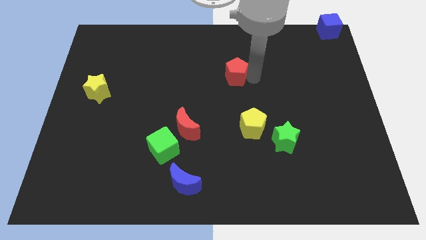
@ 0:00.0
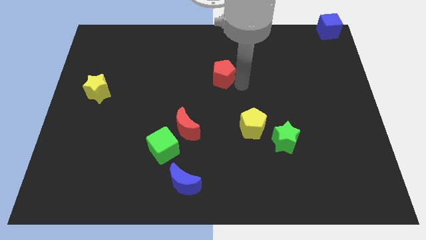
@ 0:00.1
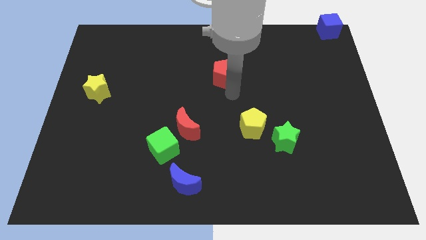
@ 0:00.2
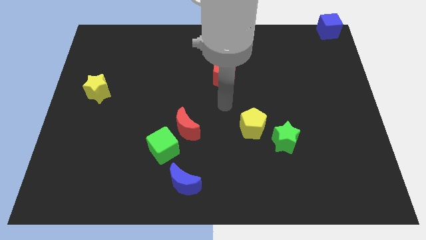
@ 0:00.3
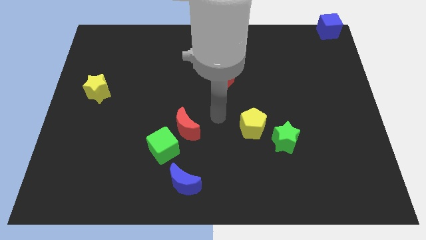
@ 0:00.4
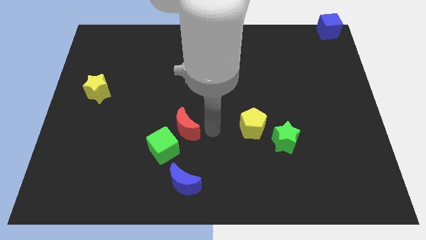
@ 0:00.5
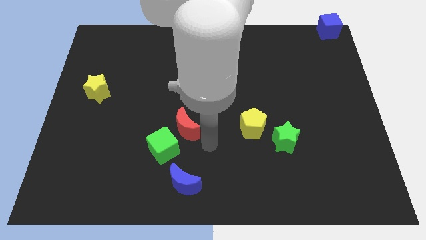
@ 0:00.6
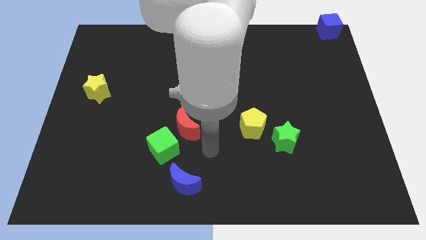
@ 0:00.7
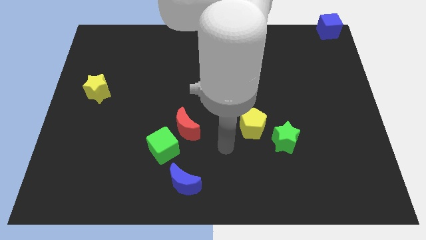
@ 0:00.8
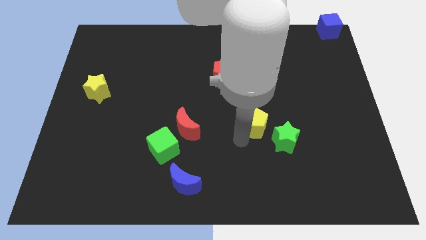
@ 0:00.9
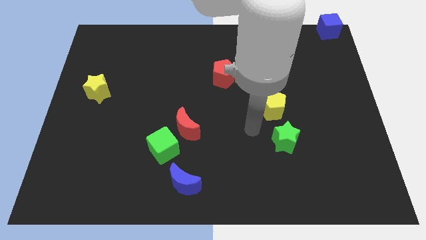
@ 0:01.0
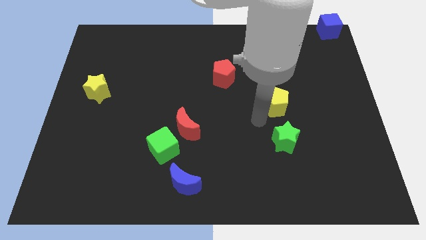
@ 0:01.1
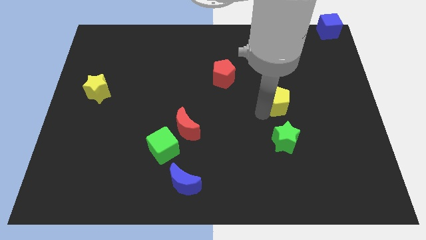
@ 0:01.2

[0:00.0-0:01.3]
push the yellow pentagon above the green star

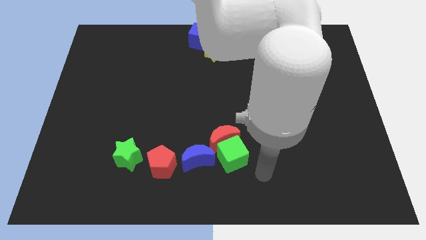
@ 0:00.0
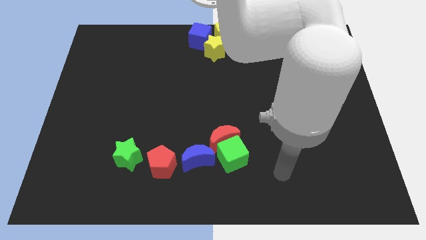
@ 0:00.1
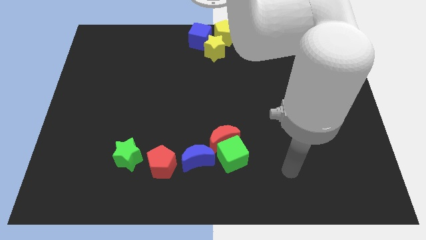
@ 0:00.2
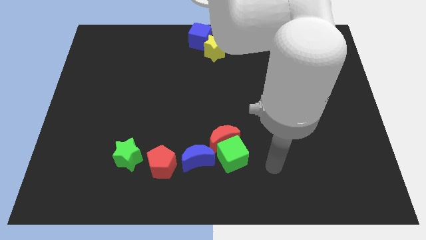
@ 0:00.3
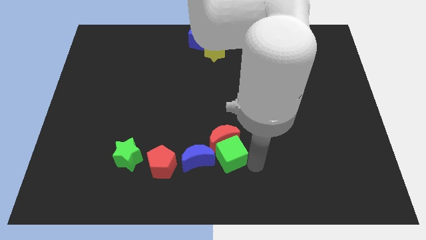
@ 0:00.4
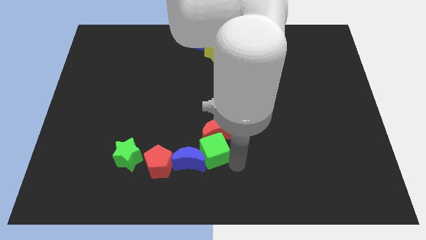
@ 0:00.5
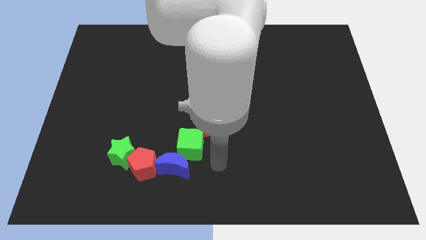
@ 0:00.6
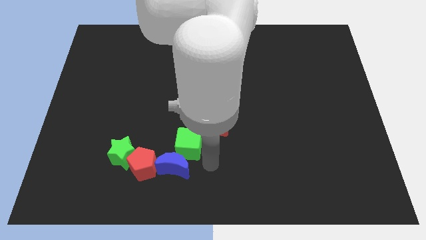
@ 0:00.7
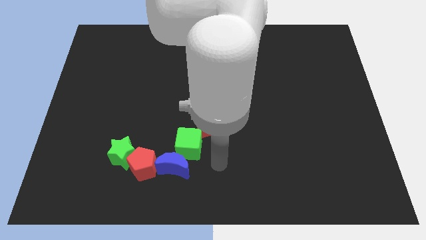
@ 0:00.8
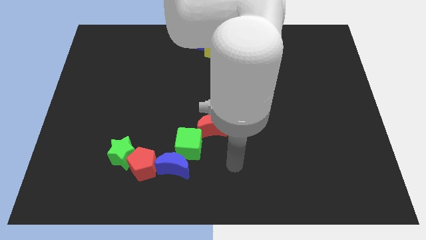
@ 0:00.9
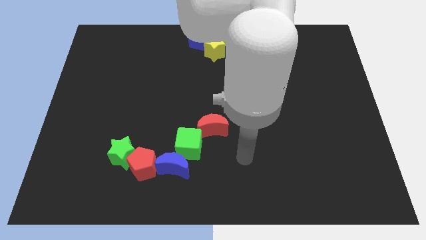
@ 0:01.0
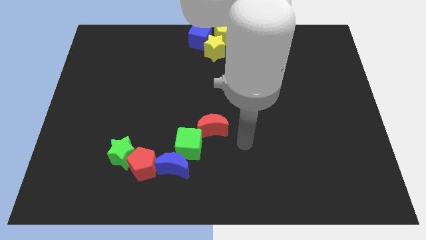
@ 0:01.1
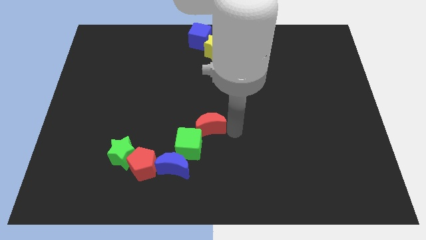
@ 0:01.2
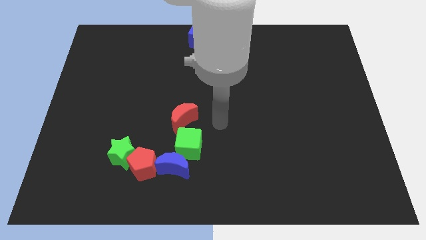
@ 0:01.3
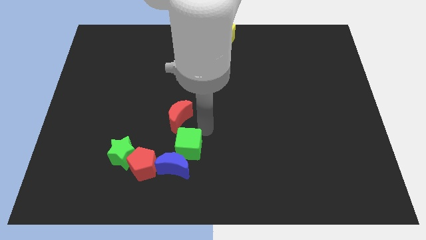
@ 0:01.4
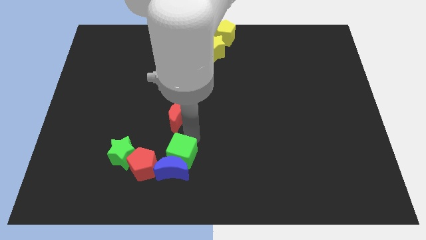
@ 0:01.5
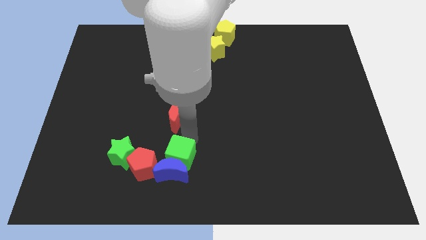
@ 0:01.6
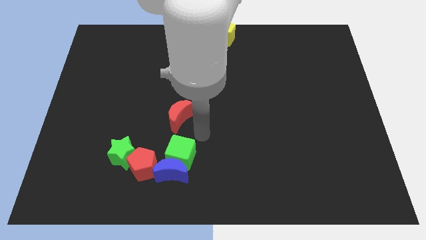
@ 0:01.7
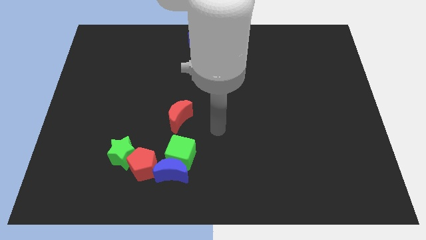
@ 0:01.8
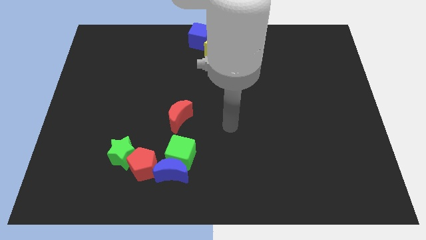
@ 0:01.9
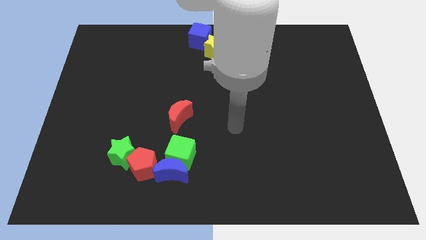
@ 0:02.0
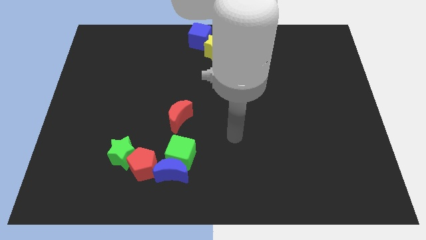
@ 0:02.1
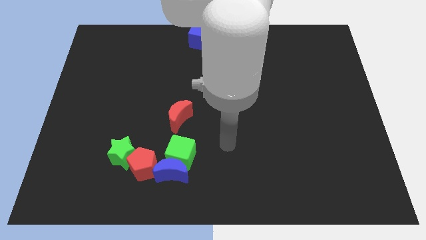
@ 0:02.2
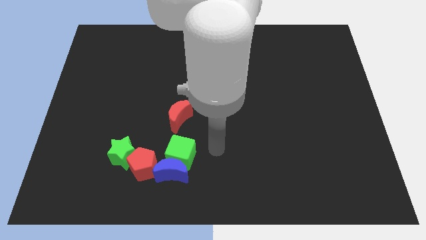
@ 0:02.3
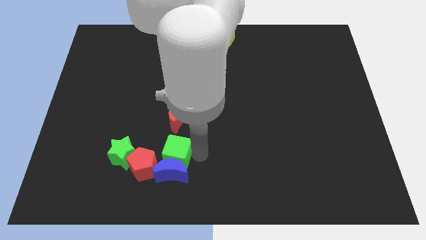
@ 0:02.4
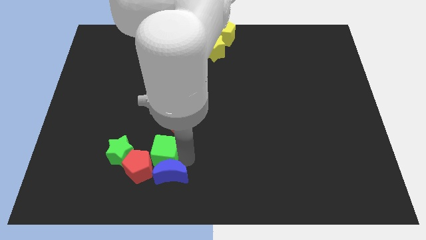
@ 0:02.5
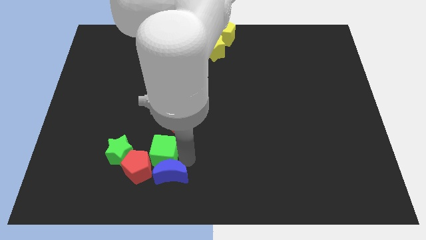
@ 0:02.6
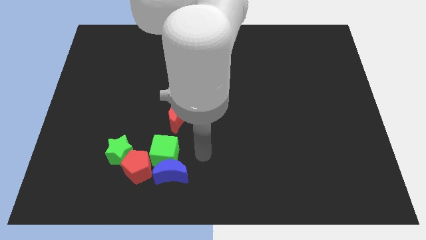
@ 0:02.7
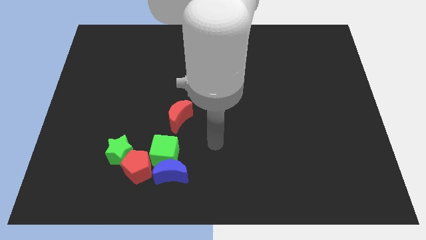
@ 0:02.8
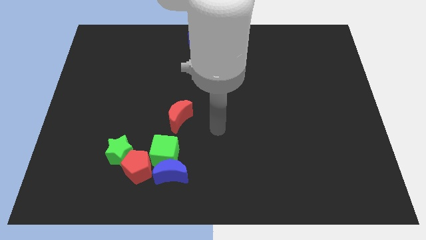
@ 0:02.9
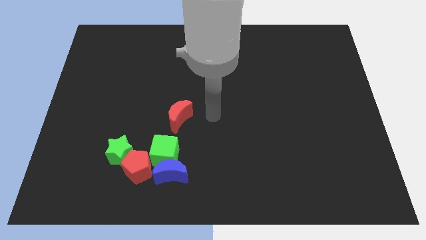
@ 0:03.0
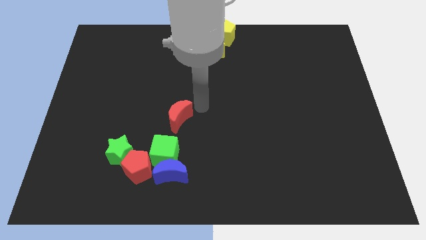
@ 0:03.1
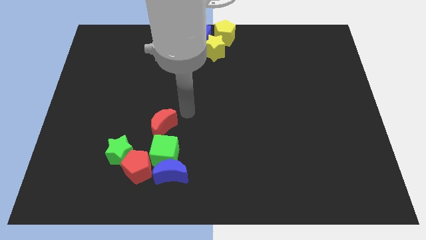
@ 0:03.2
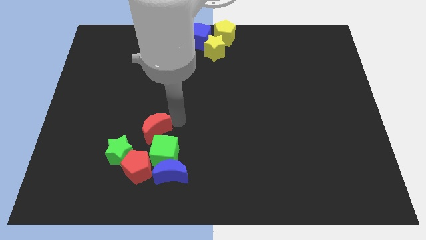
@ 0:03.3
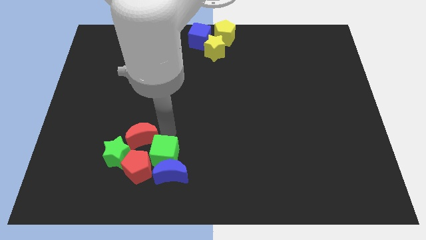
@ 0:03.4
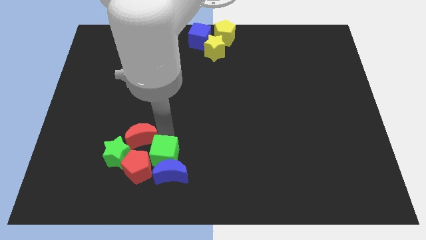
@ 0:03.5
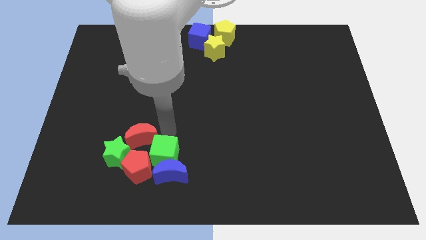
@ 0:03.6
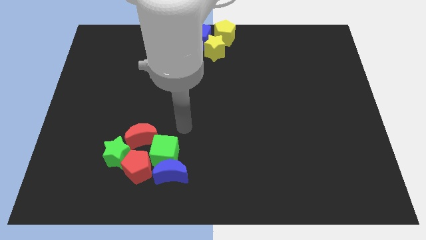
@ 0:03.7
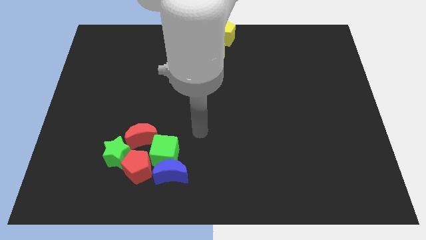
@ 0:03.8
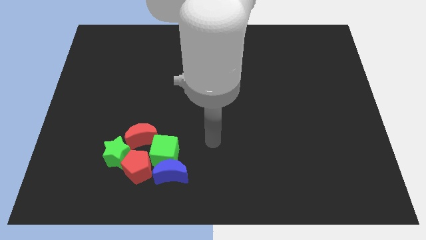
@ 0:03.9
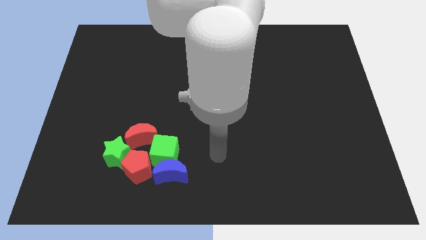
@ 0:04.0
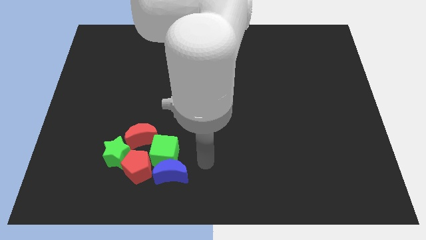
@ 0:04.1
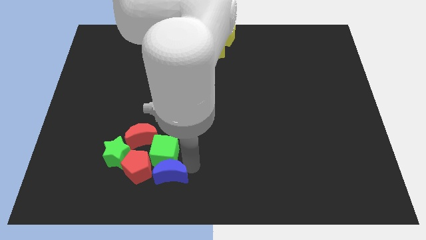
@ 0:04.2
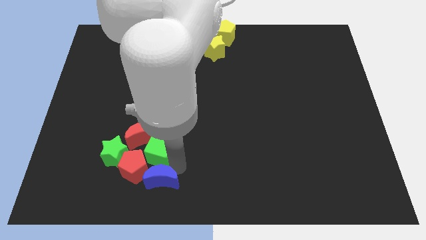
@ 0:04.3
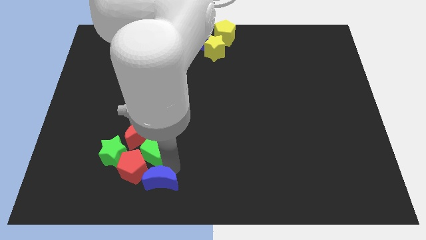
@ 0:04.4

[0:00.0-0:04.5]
make a group of blocks at the bottom left of the table

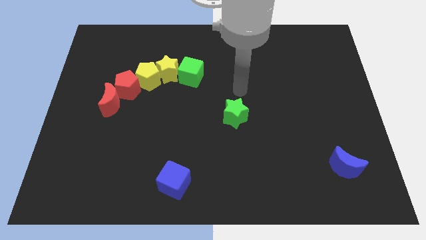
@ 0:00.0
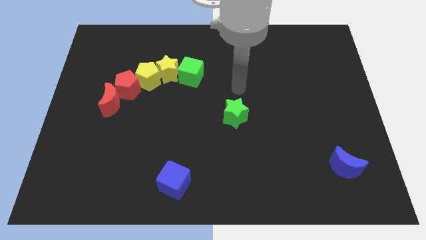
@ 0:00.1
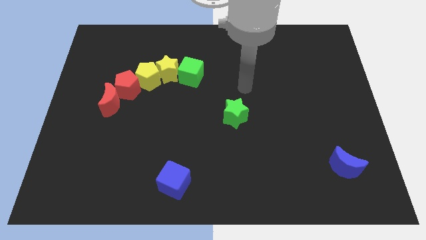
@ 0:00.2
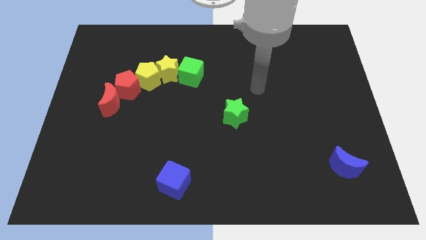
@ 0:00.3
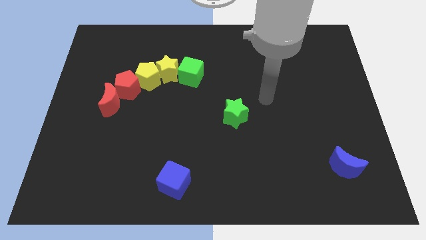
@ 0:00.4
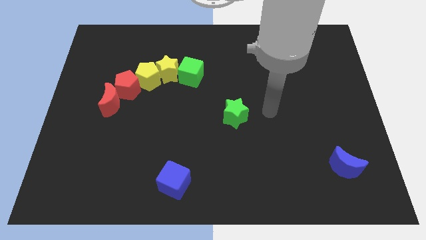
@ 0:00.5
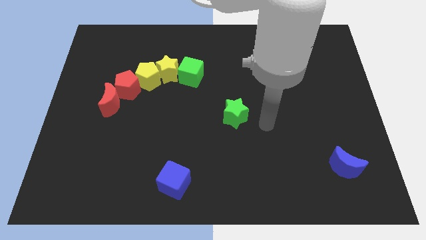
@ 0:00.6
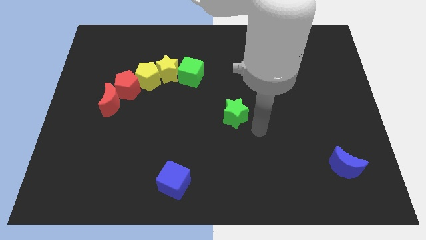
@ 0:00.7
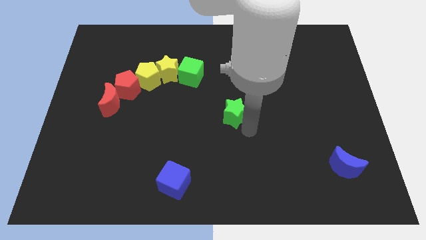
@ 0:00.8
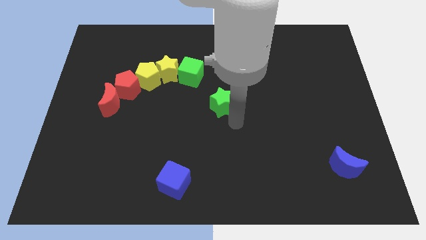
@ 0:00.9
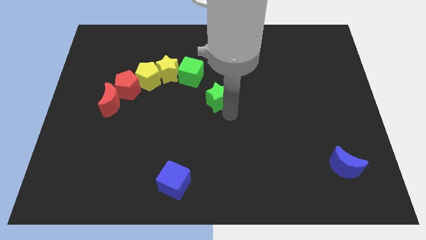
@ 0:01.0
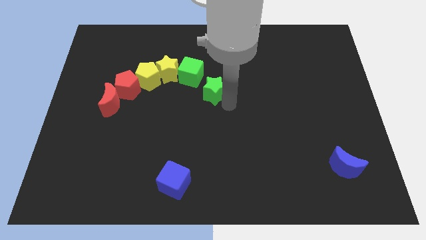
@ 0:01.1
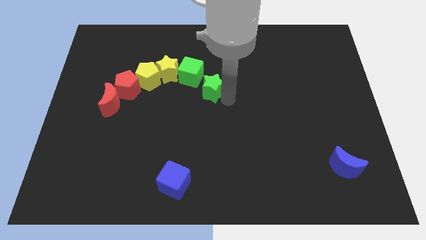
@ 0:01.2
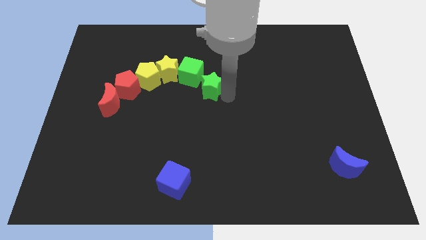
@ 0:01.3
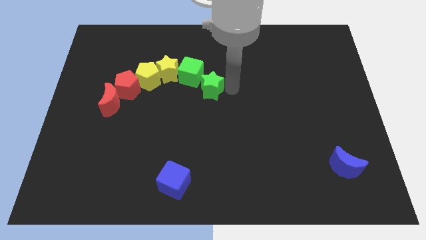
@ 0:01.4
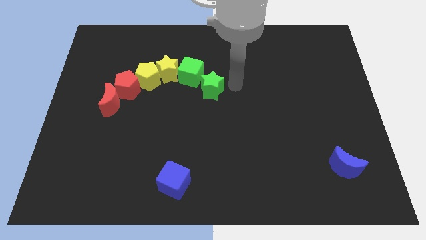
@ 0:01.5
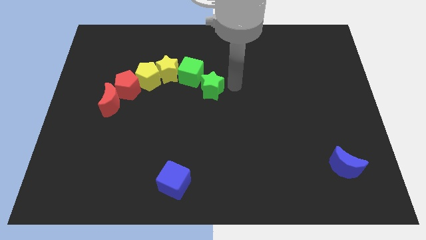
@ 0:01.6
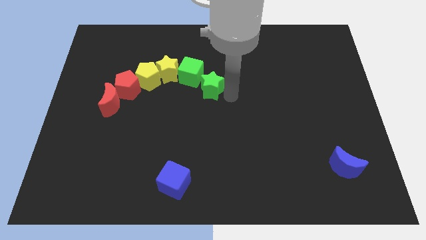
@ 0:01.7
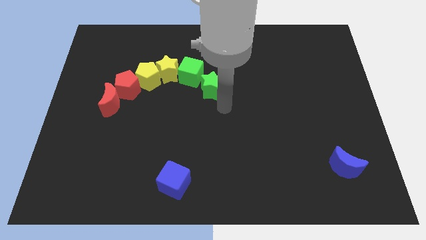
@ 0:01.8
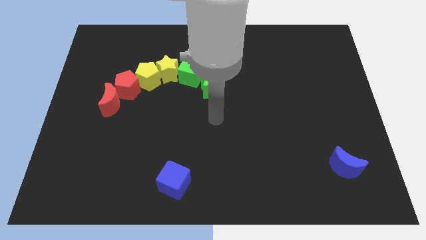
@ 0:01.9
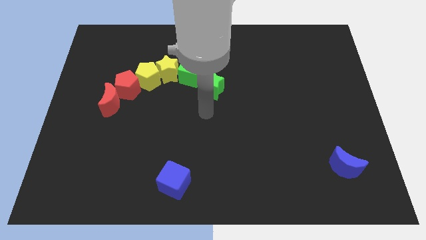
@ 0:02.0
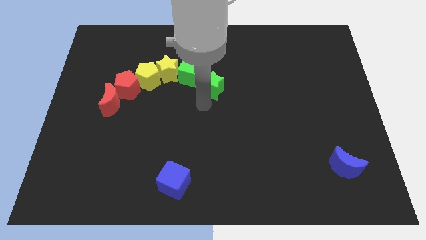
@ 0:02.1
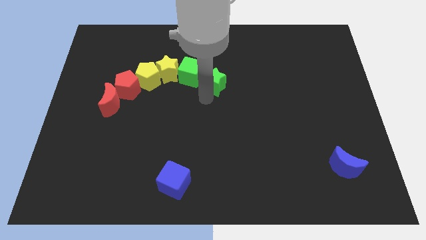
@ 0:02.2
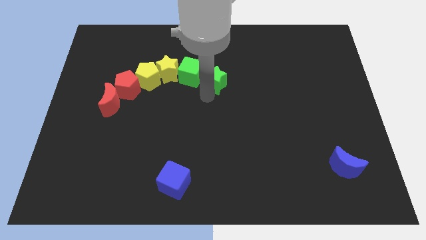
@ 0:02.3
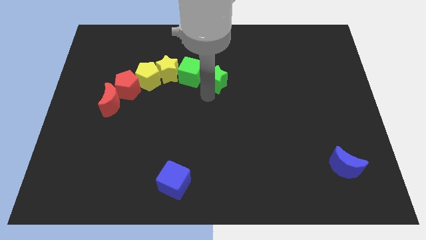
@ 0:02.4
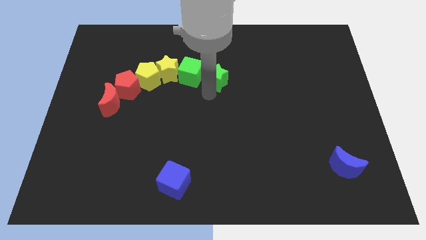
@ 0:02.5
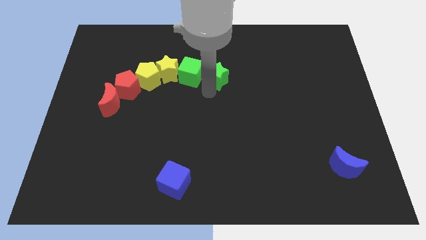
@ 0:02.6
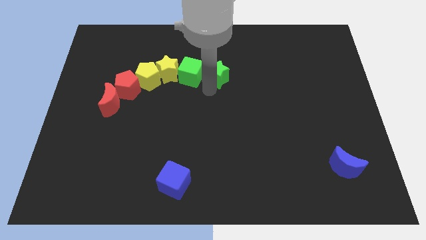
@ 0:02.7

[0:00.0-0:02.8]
place the green star to the right of the green cube

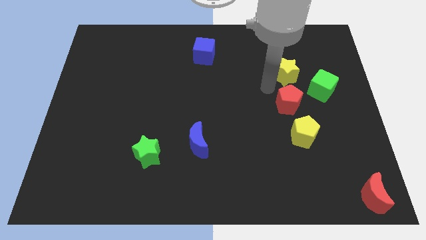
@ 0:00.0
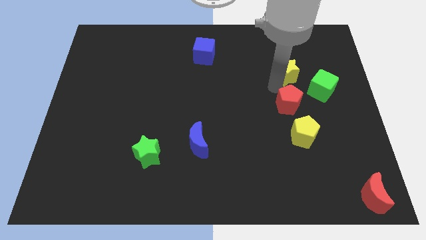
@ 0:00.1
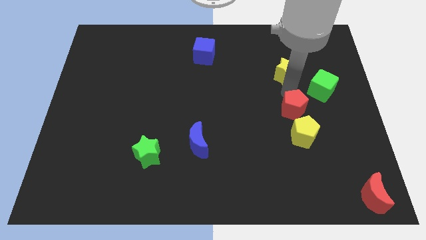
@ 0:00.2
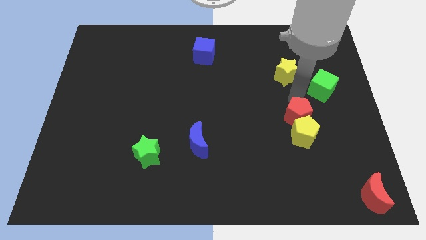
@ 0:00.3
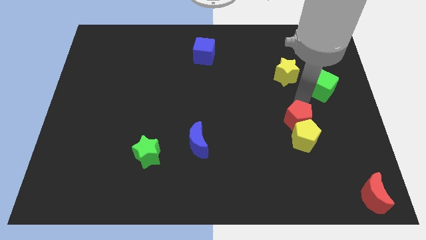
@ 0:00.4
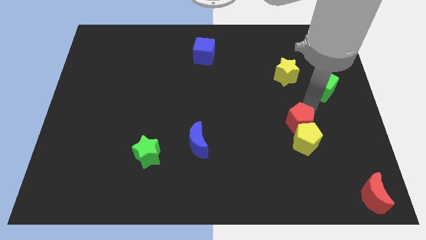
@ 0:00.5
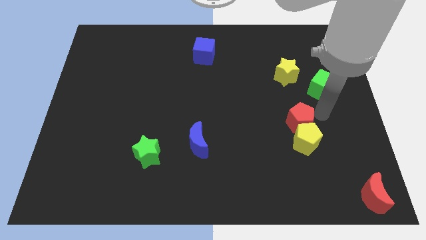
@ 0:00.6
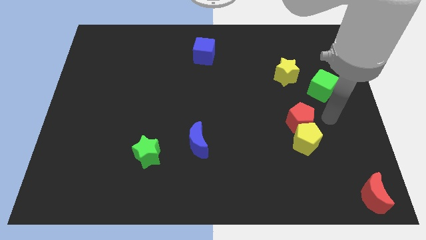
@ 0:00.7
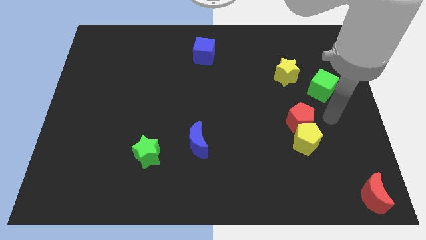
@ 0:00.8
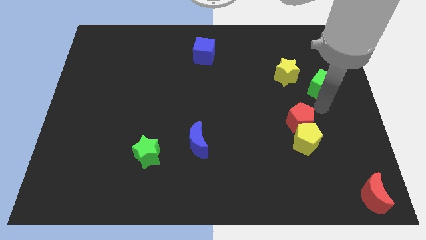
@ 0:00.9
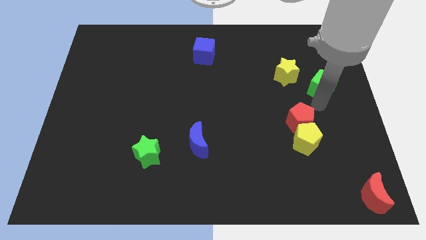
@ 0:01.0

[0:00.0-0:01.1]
slide the red pentagon into the yellow pentagon
